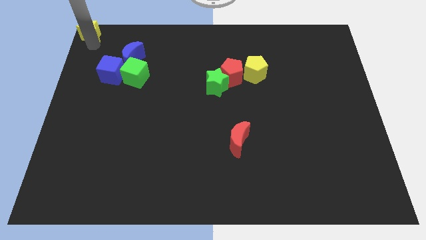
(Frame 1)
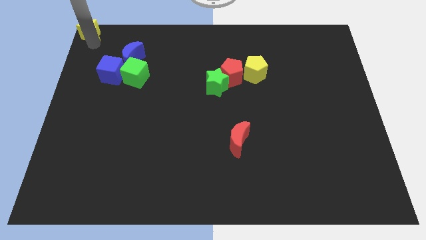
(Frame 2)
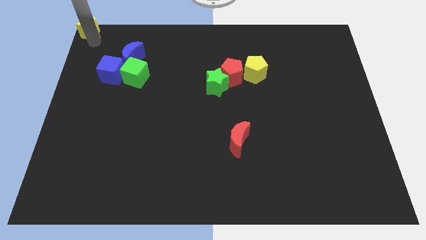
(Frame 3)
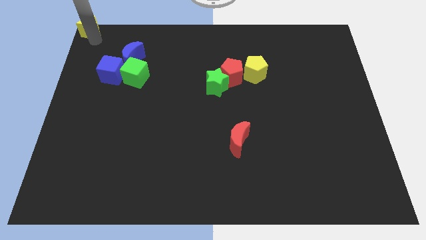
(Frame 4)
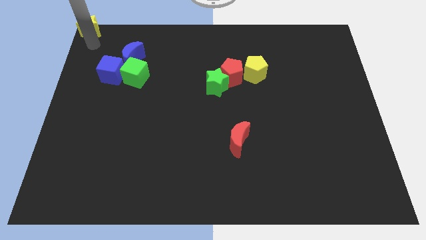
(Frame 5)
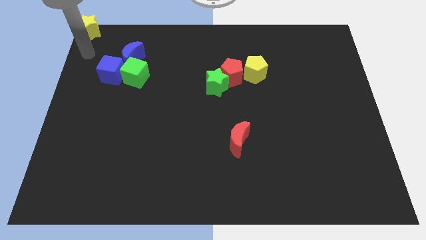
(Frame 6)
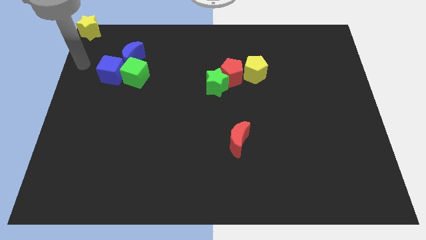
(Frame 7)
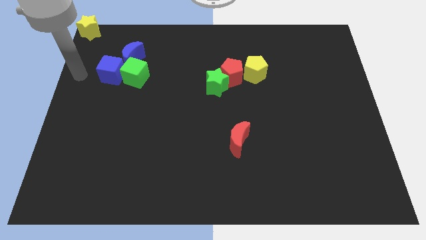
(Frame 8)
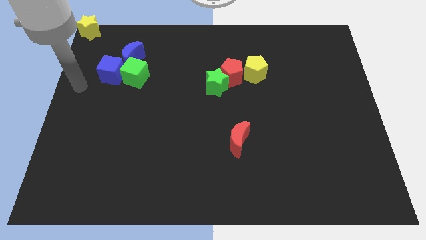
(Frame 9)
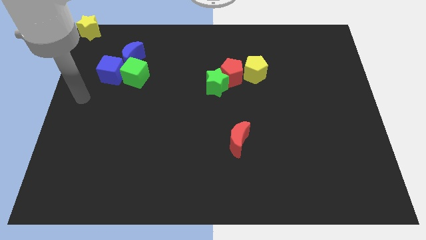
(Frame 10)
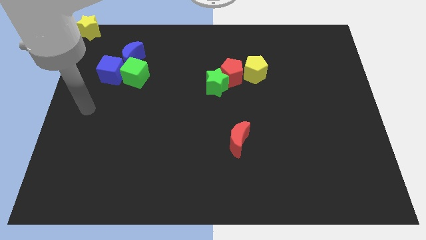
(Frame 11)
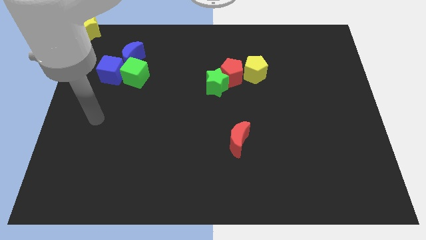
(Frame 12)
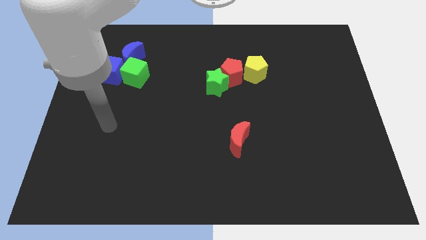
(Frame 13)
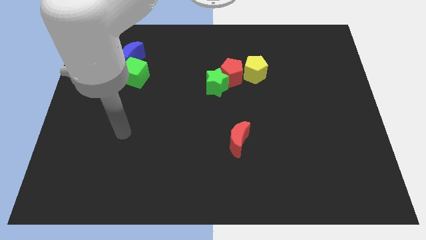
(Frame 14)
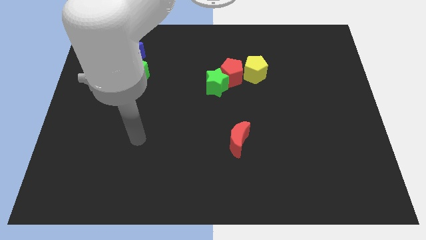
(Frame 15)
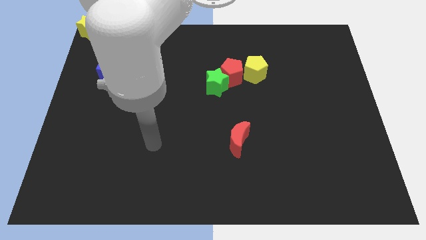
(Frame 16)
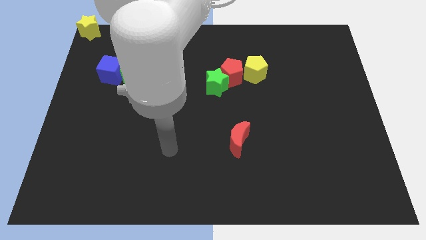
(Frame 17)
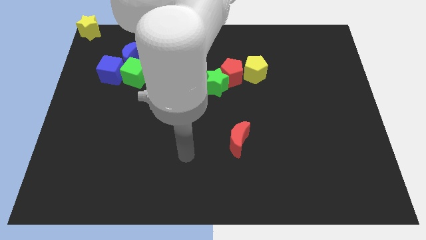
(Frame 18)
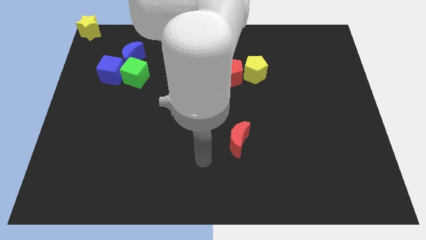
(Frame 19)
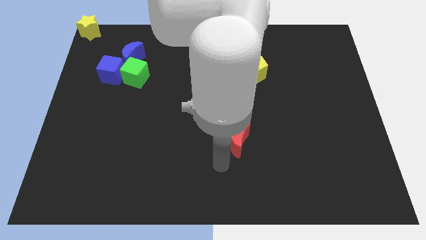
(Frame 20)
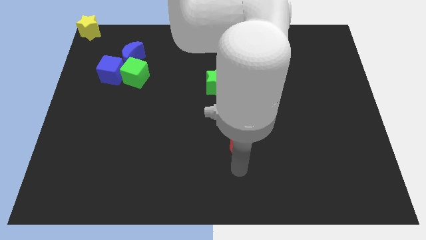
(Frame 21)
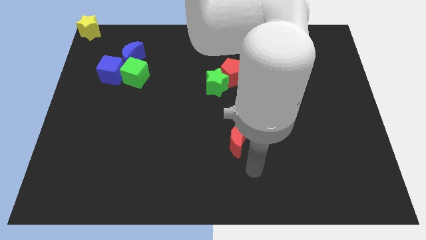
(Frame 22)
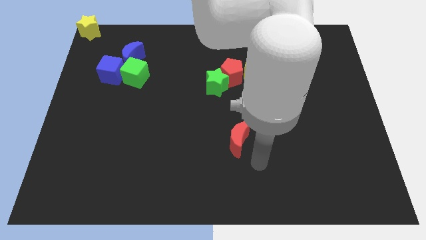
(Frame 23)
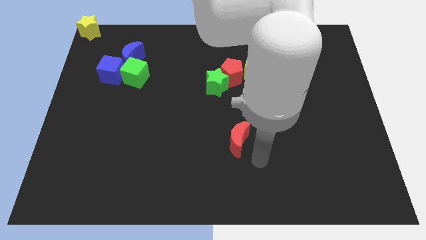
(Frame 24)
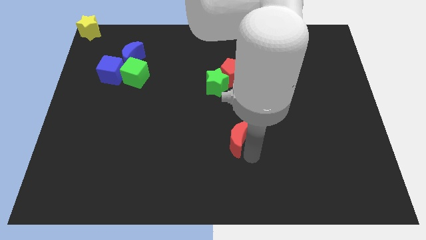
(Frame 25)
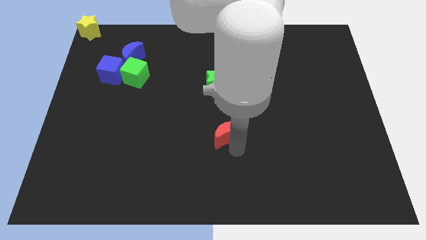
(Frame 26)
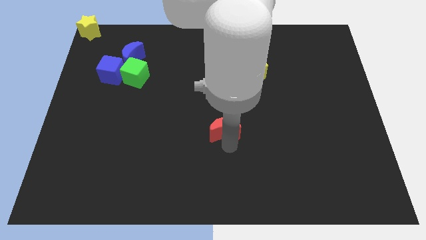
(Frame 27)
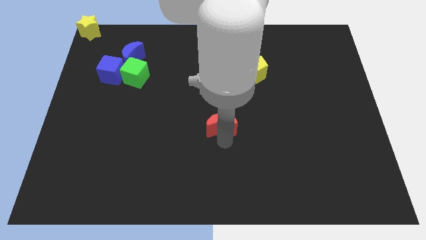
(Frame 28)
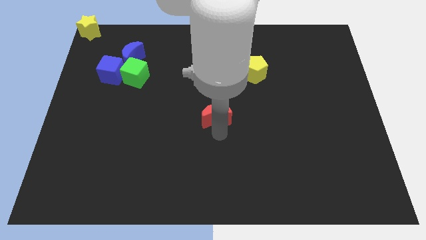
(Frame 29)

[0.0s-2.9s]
move the arm away from the yellow star

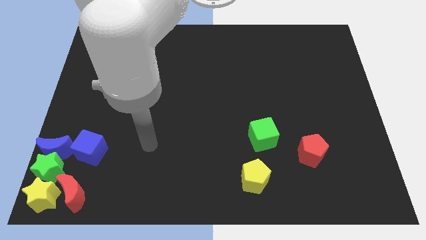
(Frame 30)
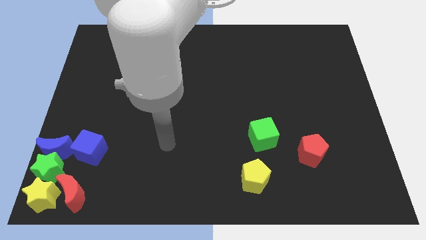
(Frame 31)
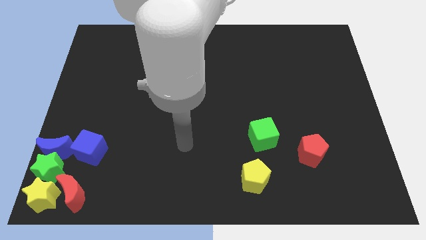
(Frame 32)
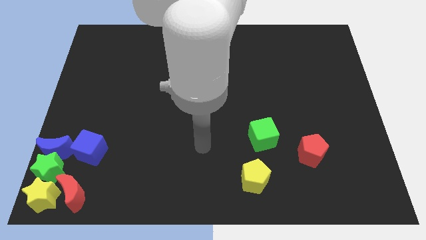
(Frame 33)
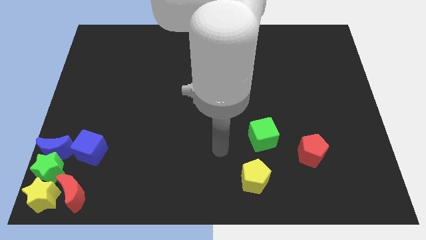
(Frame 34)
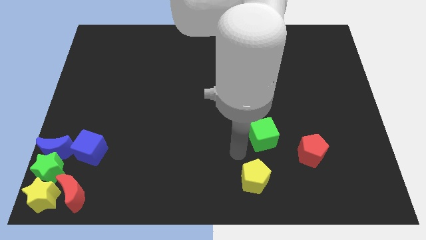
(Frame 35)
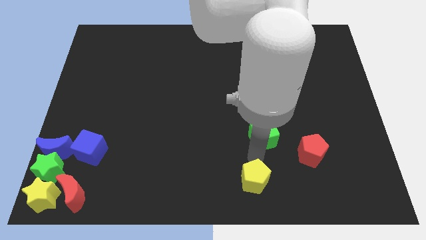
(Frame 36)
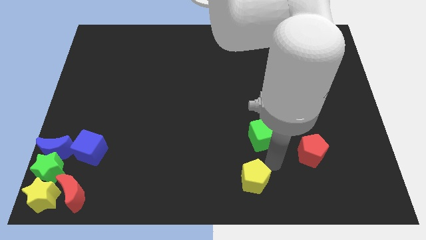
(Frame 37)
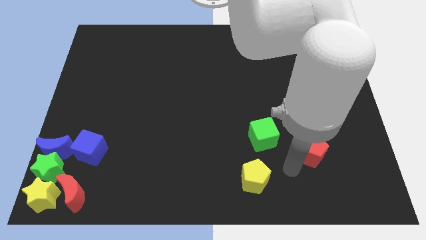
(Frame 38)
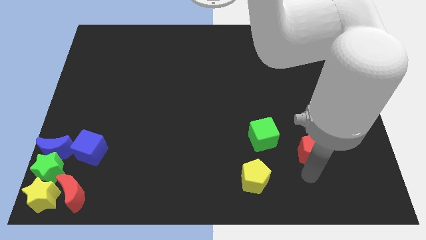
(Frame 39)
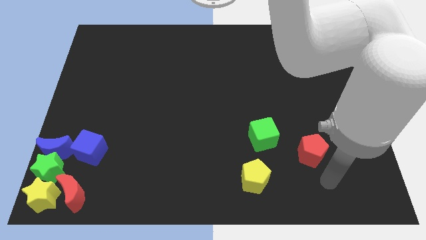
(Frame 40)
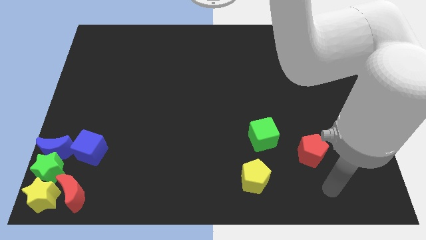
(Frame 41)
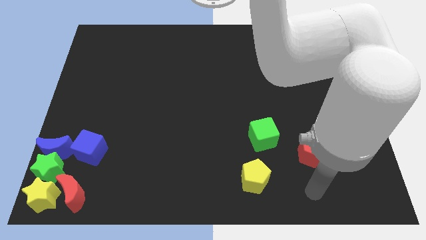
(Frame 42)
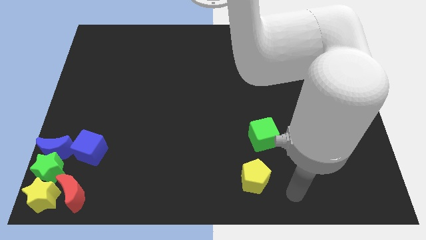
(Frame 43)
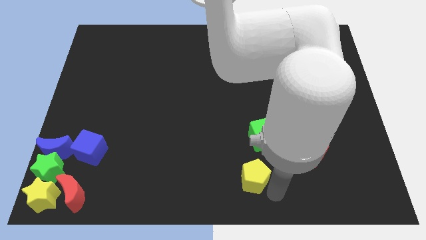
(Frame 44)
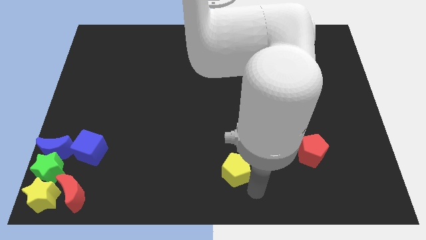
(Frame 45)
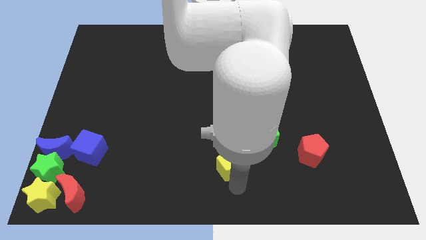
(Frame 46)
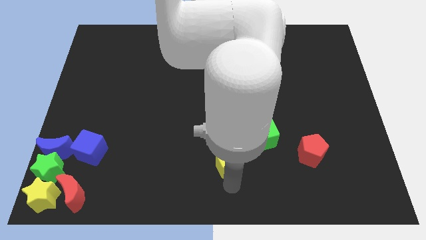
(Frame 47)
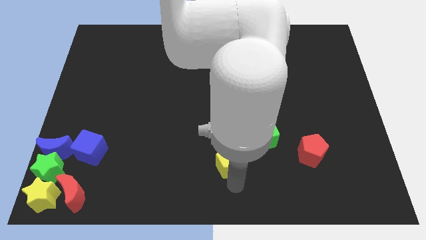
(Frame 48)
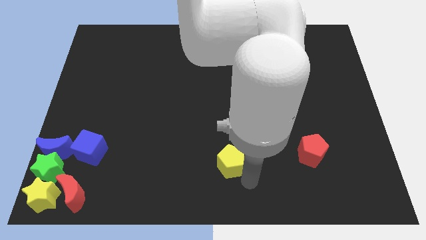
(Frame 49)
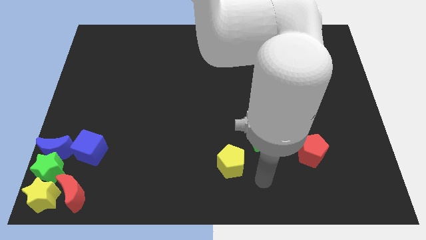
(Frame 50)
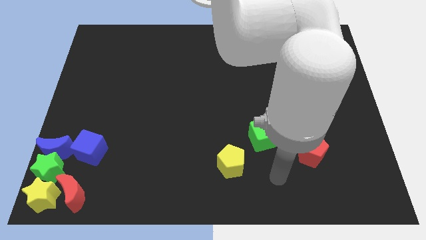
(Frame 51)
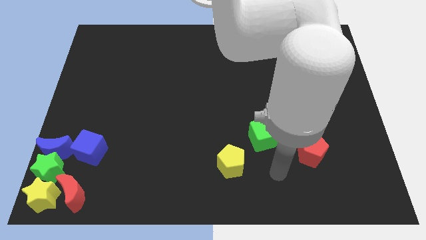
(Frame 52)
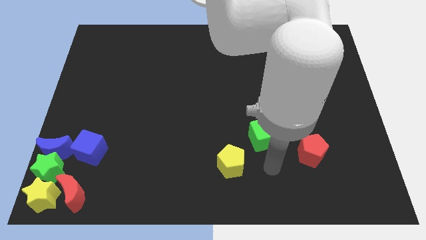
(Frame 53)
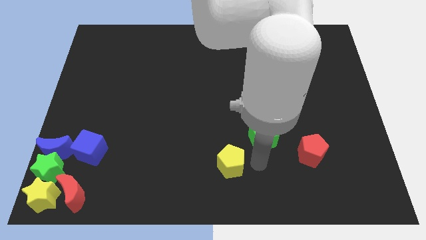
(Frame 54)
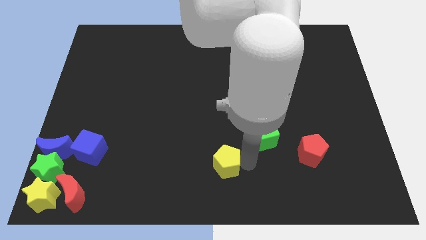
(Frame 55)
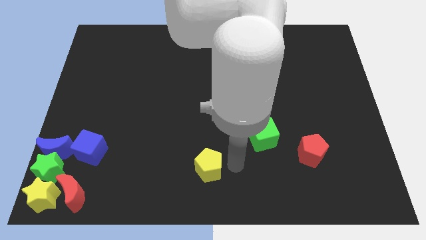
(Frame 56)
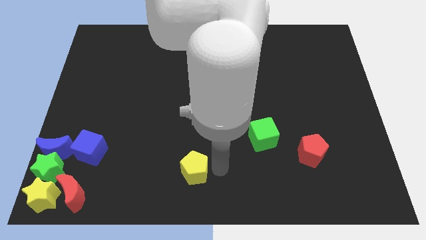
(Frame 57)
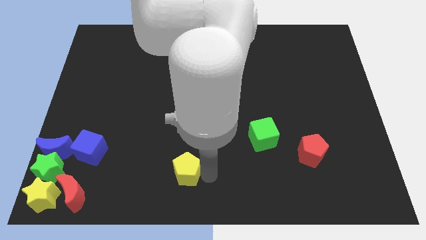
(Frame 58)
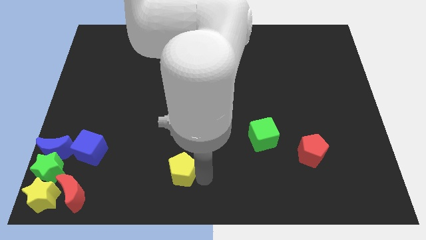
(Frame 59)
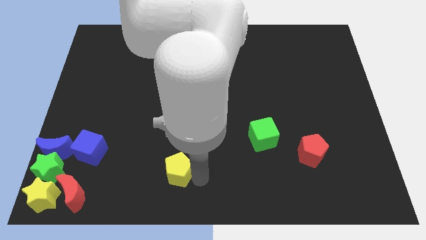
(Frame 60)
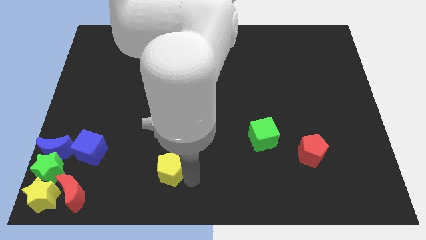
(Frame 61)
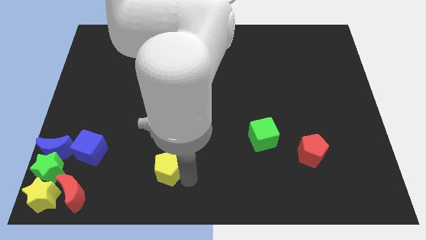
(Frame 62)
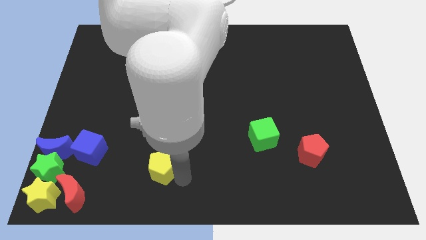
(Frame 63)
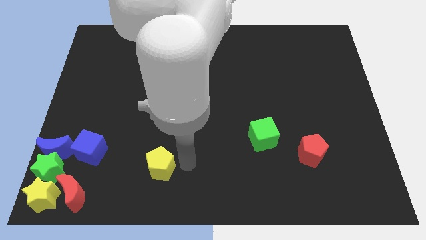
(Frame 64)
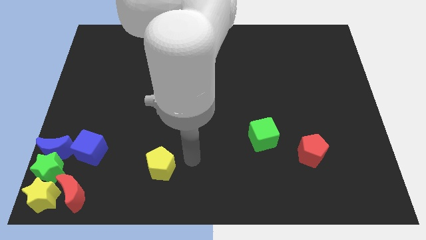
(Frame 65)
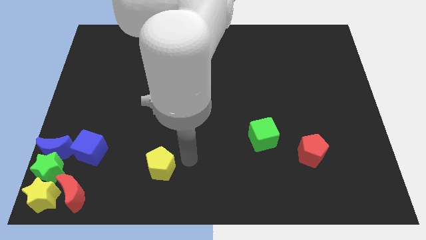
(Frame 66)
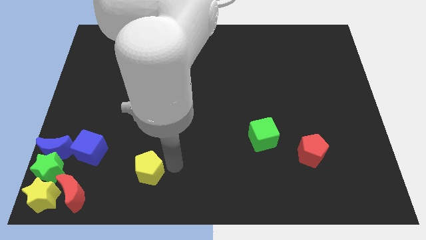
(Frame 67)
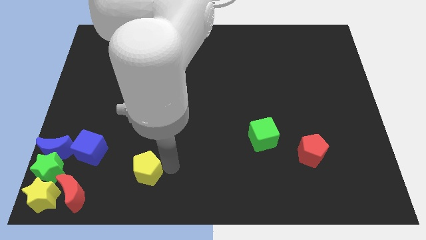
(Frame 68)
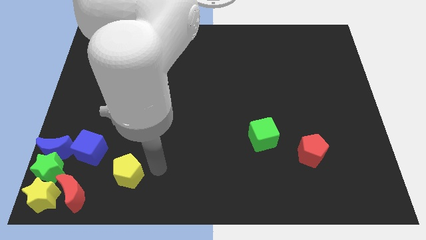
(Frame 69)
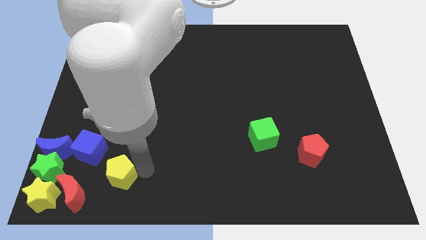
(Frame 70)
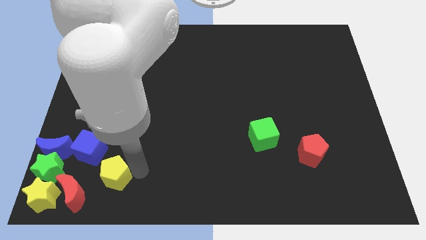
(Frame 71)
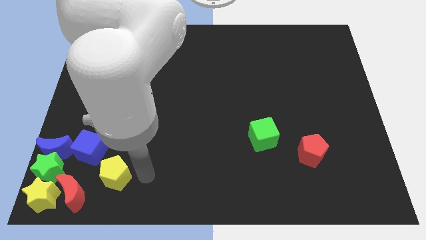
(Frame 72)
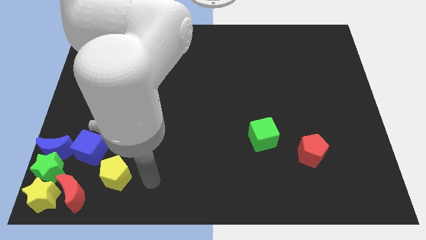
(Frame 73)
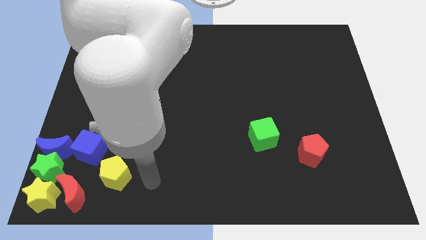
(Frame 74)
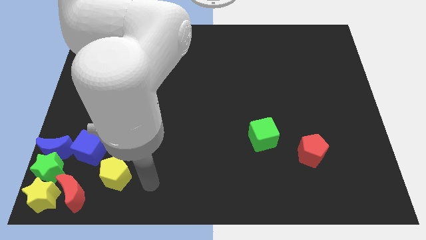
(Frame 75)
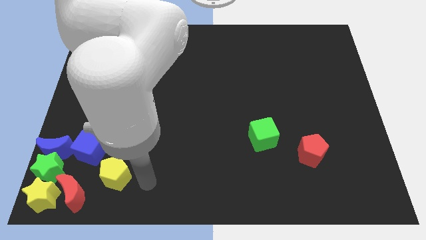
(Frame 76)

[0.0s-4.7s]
slide the yellow pentagon slightly to the left

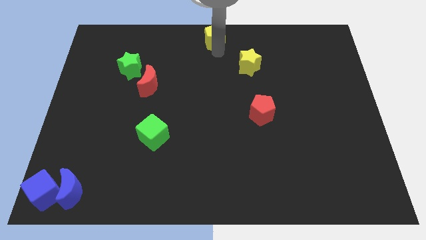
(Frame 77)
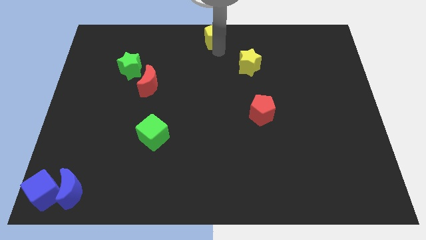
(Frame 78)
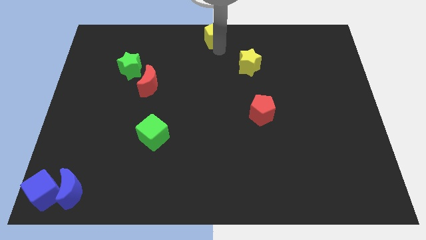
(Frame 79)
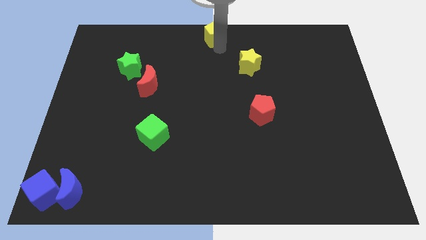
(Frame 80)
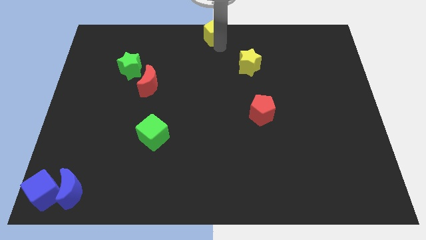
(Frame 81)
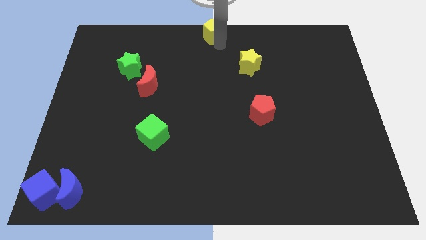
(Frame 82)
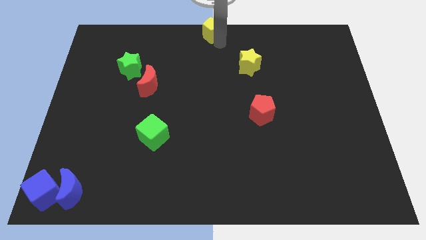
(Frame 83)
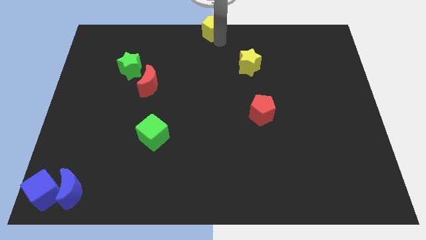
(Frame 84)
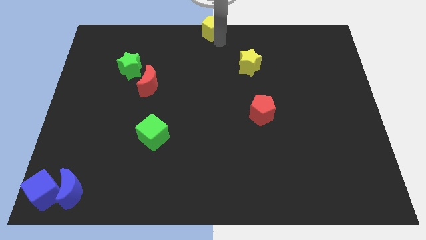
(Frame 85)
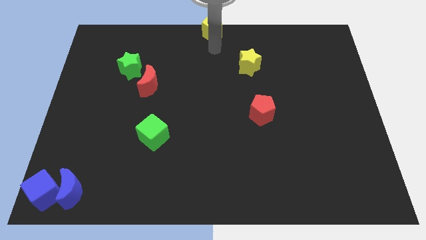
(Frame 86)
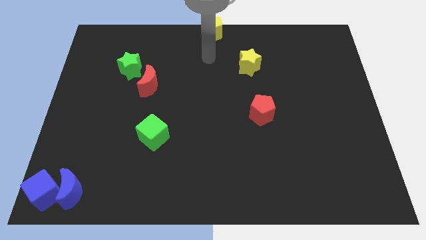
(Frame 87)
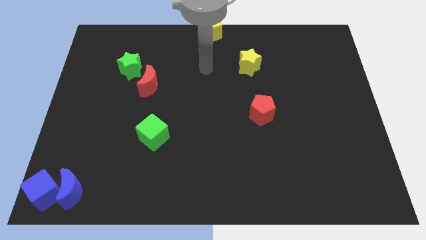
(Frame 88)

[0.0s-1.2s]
move the yellow pentagon to the top center of the board

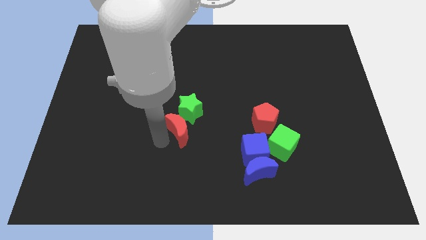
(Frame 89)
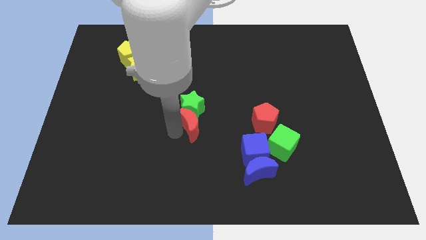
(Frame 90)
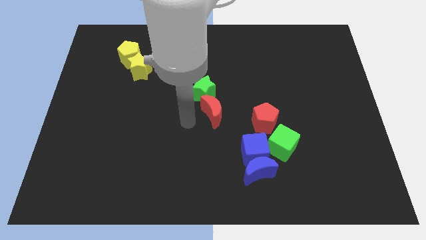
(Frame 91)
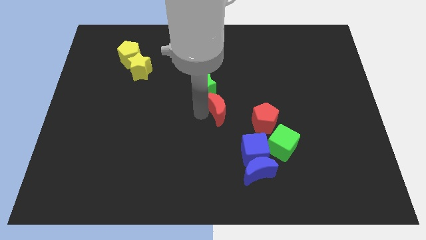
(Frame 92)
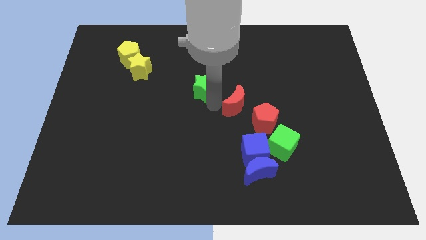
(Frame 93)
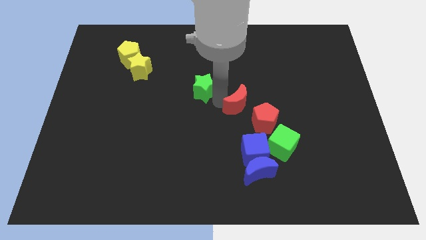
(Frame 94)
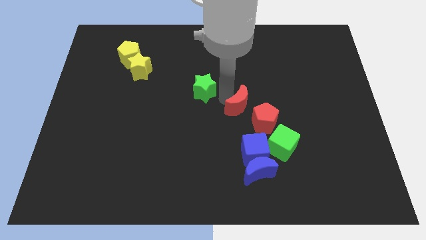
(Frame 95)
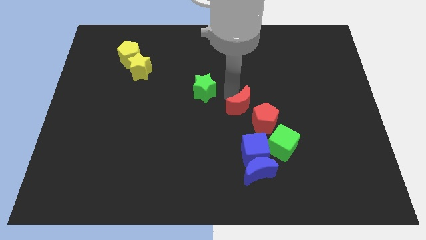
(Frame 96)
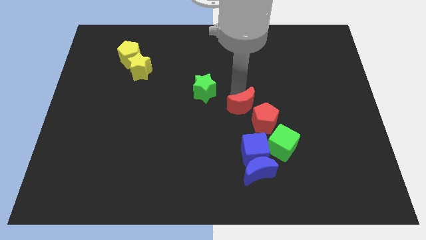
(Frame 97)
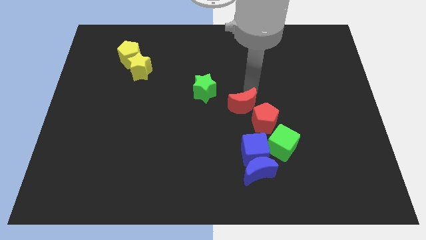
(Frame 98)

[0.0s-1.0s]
separate the green star and the red crescent
